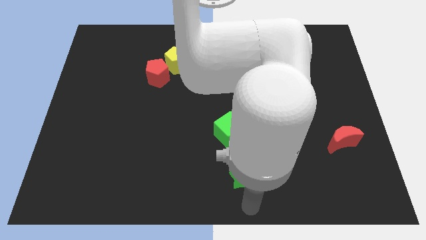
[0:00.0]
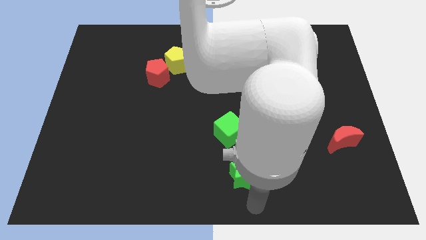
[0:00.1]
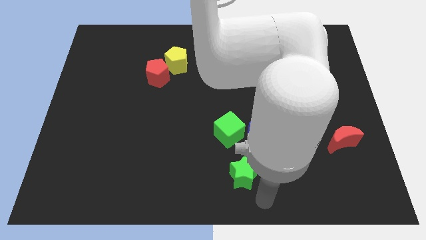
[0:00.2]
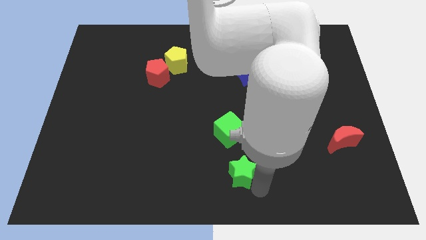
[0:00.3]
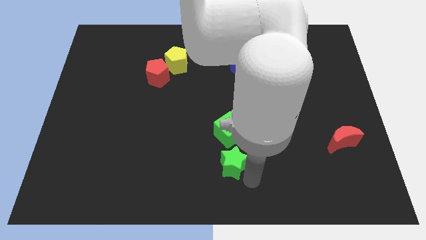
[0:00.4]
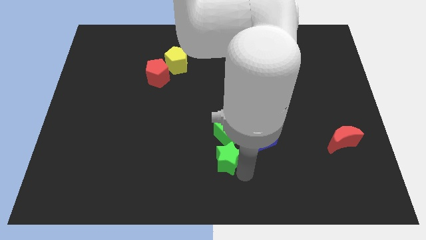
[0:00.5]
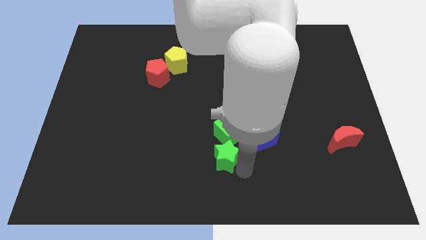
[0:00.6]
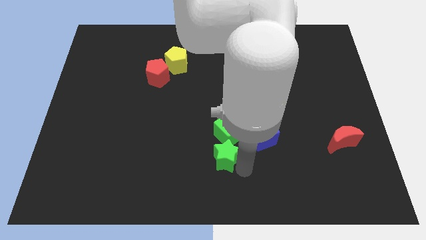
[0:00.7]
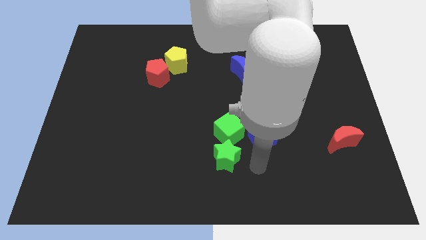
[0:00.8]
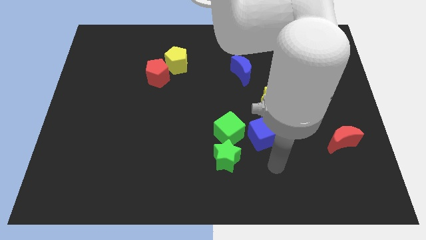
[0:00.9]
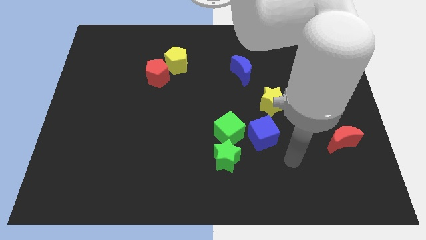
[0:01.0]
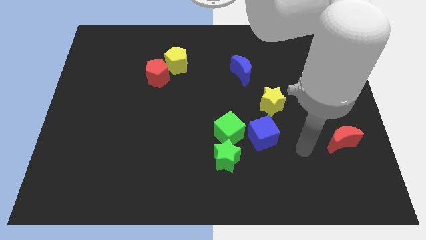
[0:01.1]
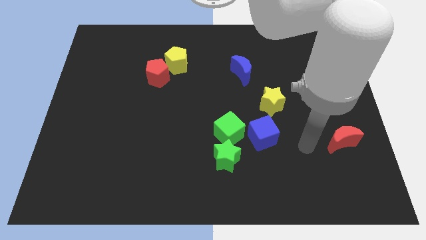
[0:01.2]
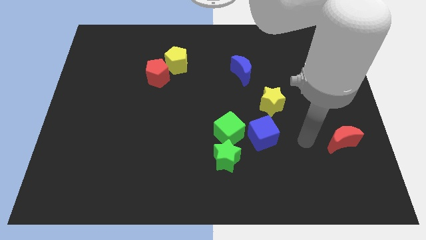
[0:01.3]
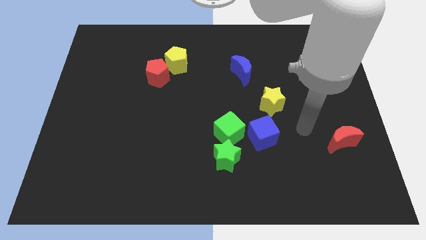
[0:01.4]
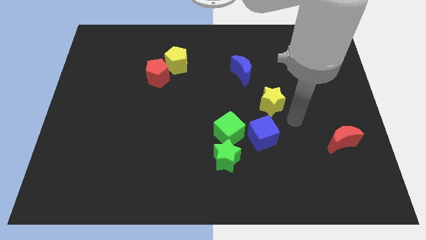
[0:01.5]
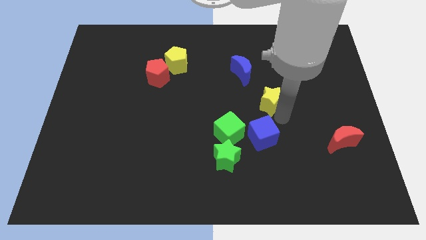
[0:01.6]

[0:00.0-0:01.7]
move the green star towards the green cube

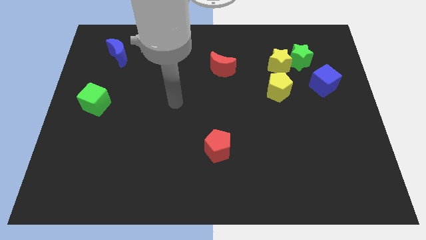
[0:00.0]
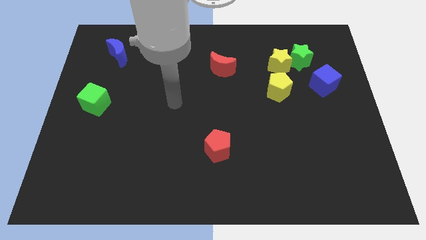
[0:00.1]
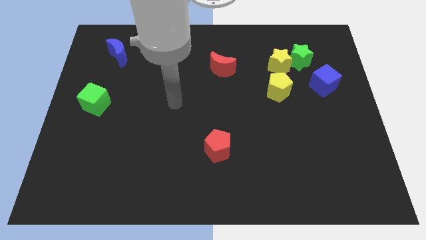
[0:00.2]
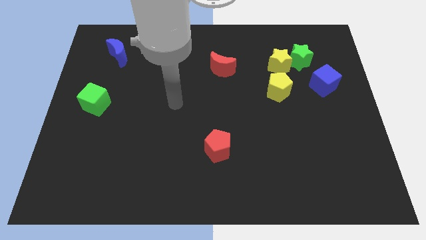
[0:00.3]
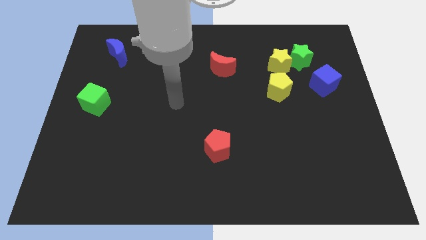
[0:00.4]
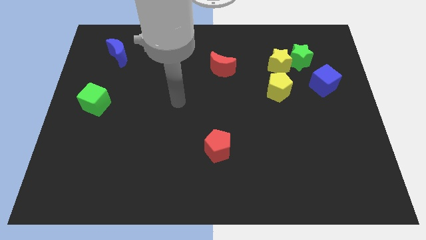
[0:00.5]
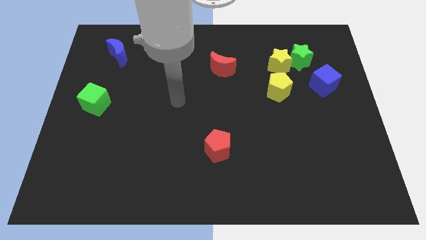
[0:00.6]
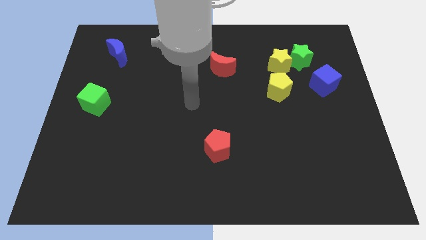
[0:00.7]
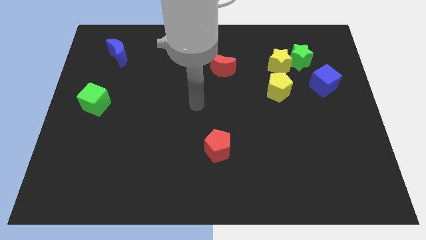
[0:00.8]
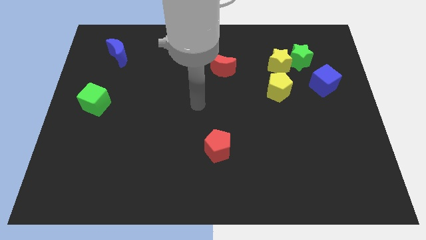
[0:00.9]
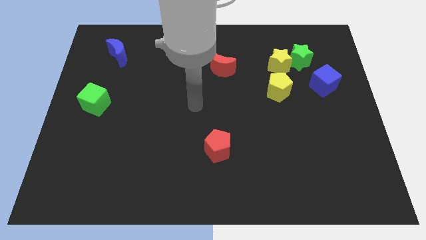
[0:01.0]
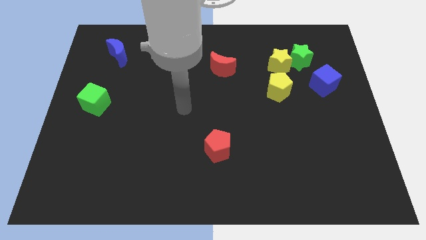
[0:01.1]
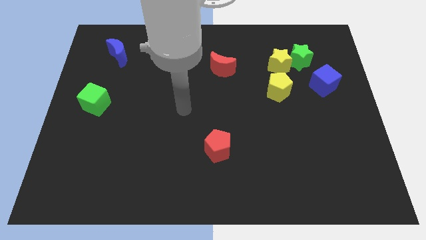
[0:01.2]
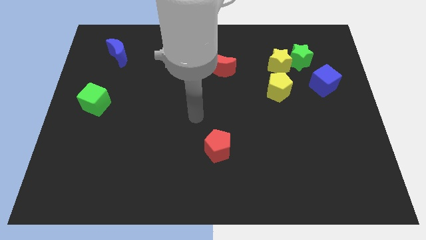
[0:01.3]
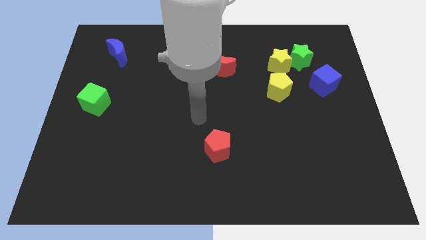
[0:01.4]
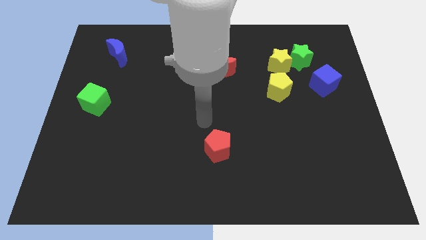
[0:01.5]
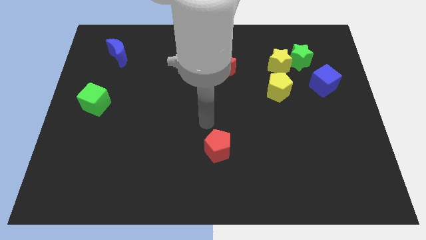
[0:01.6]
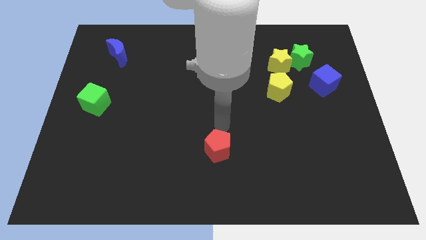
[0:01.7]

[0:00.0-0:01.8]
place your arm above the red pentagon

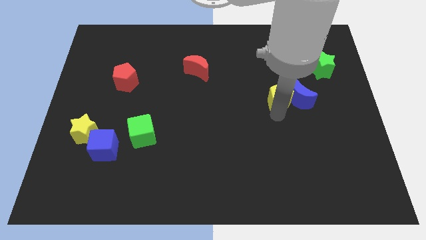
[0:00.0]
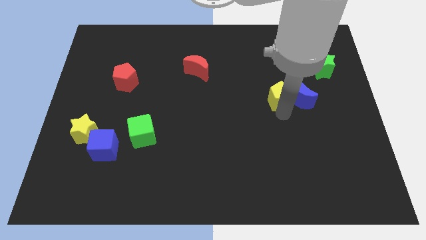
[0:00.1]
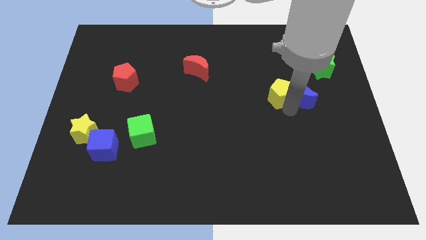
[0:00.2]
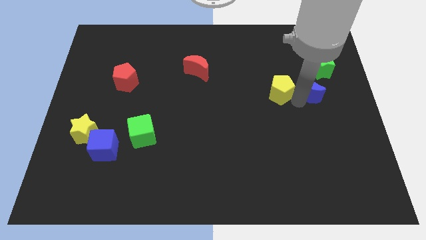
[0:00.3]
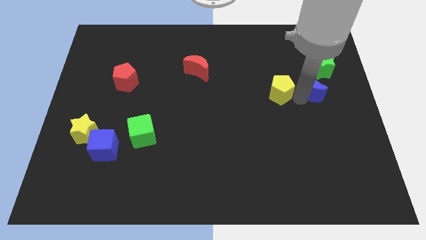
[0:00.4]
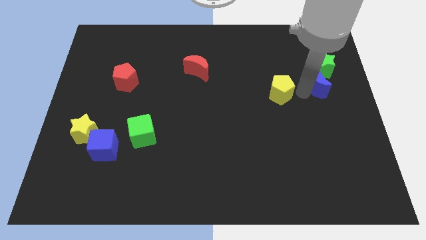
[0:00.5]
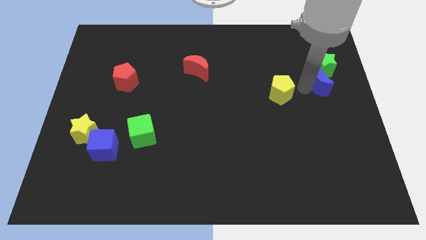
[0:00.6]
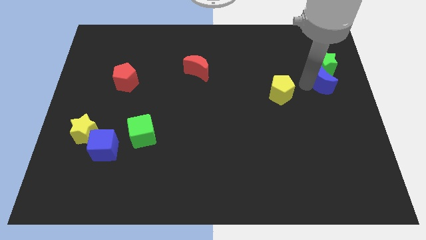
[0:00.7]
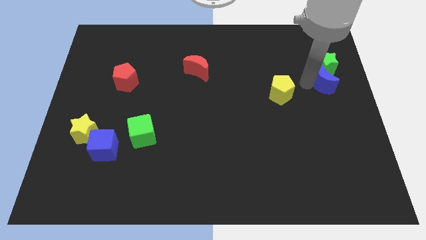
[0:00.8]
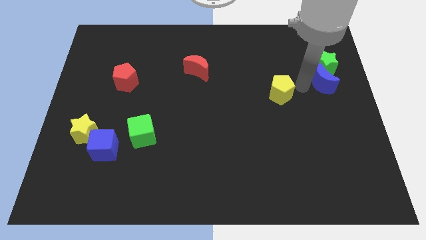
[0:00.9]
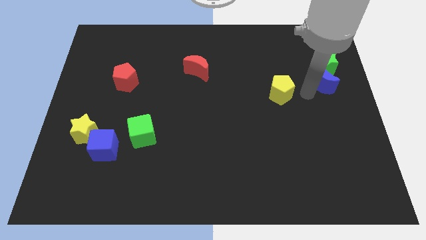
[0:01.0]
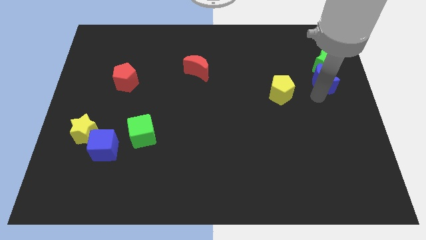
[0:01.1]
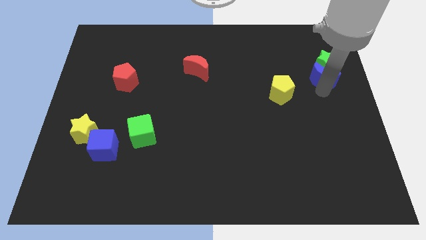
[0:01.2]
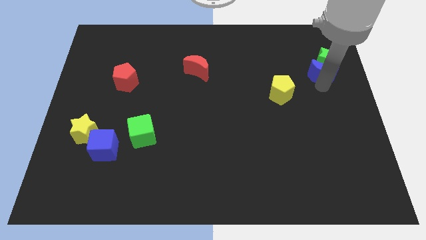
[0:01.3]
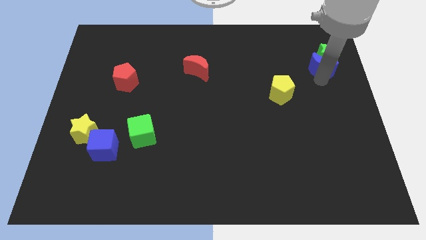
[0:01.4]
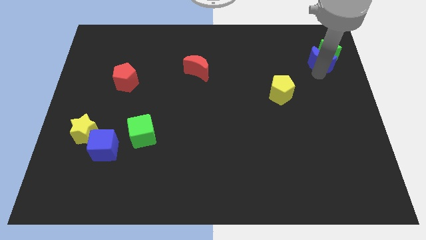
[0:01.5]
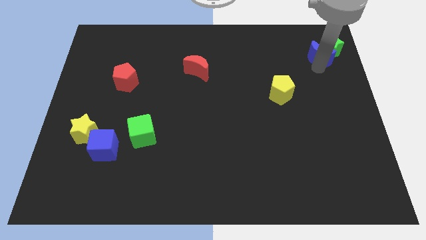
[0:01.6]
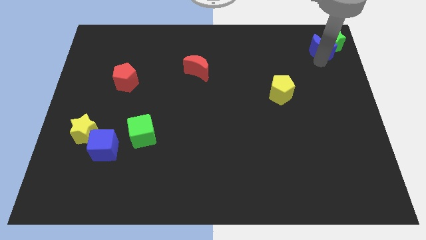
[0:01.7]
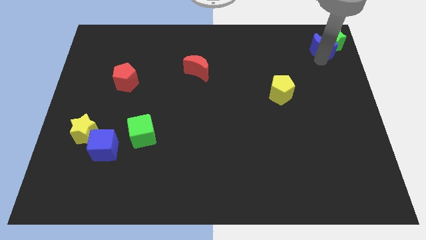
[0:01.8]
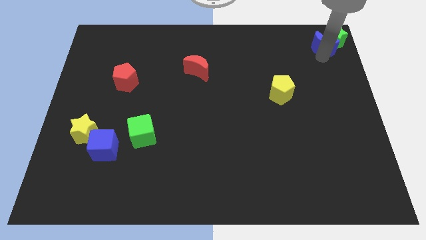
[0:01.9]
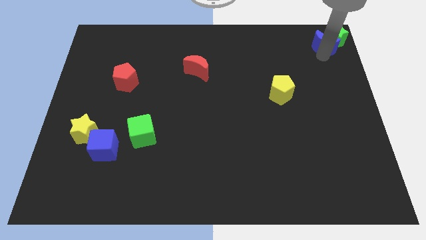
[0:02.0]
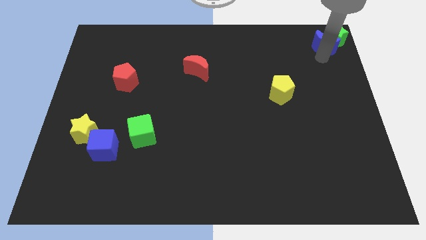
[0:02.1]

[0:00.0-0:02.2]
push the blue moon into the green star

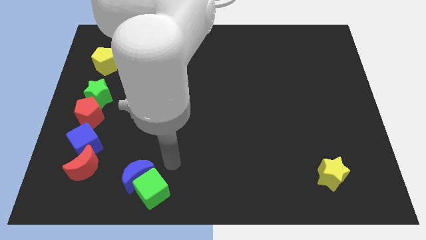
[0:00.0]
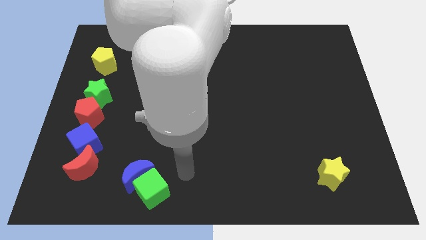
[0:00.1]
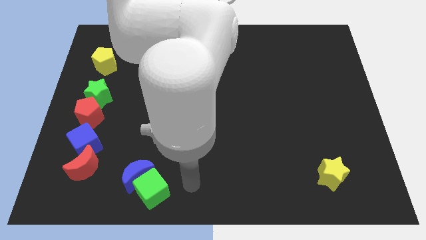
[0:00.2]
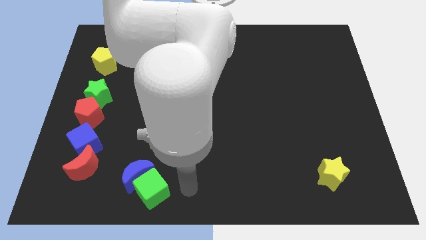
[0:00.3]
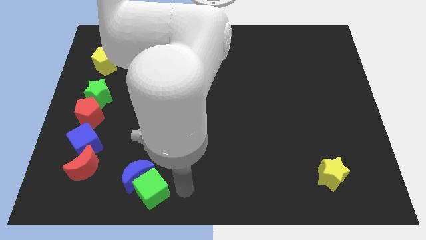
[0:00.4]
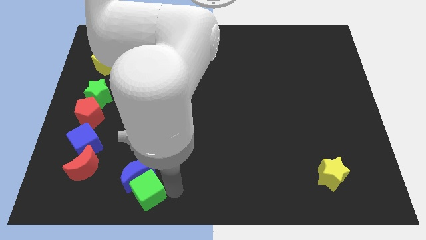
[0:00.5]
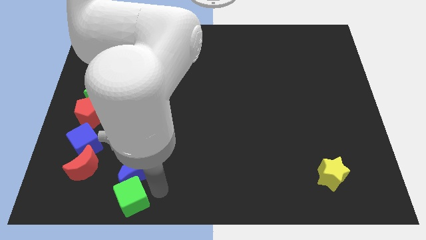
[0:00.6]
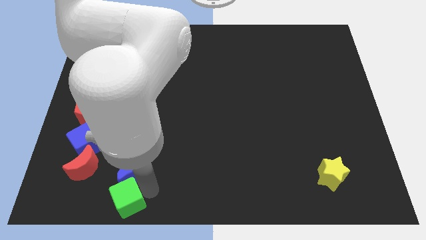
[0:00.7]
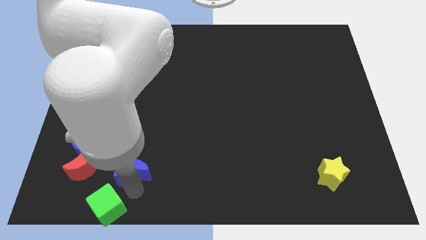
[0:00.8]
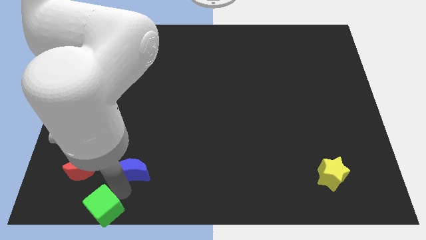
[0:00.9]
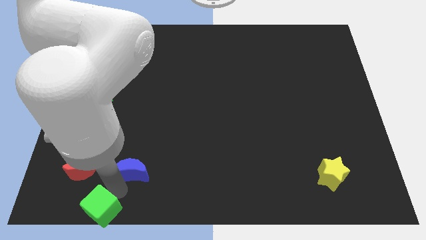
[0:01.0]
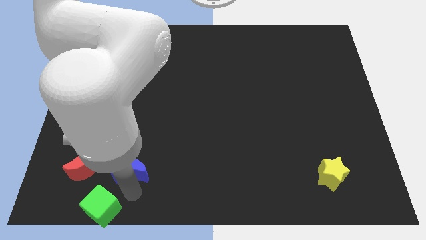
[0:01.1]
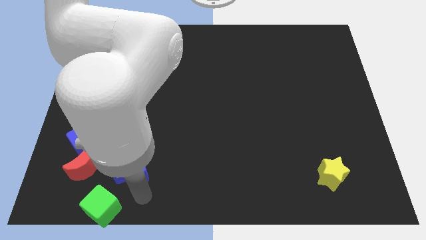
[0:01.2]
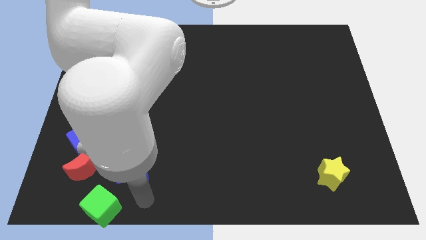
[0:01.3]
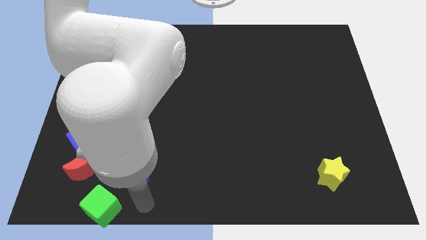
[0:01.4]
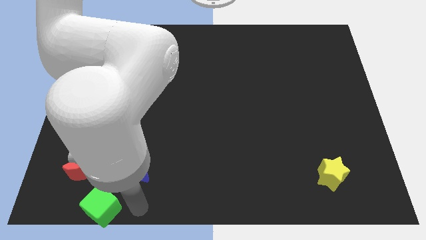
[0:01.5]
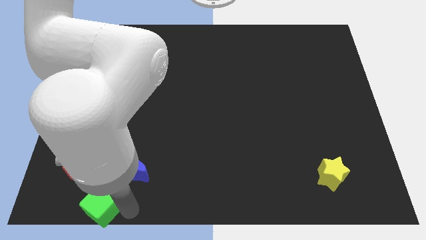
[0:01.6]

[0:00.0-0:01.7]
move the green cube to the left side of the board

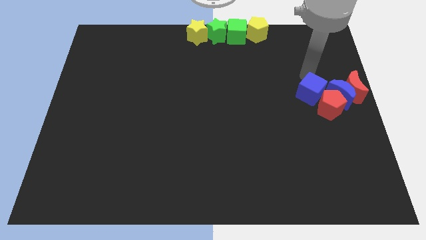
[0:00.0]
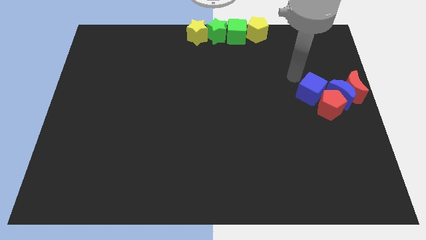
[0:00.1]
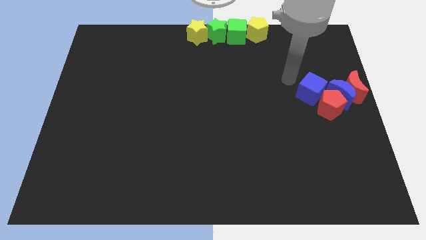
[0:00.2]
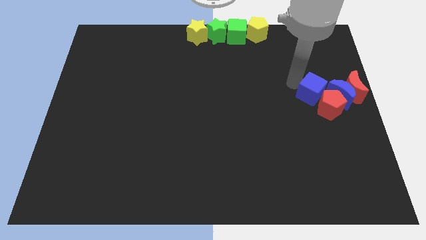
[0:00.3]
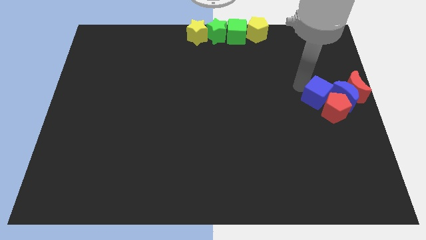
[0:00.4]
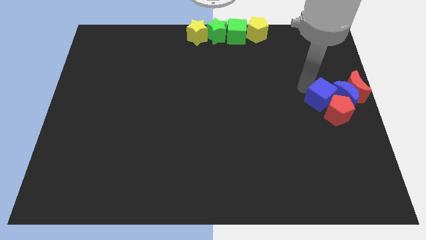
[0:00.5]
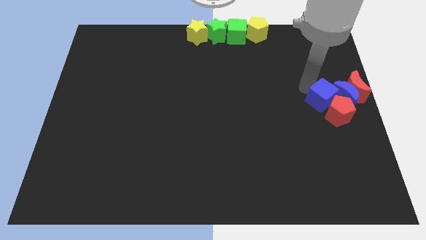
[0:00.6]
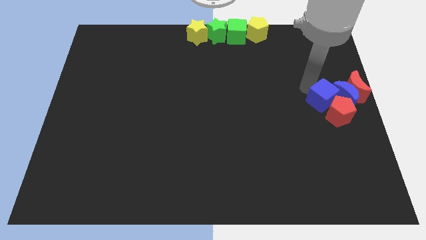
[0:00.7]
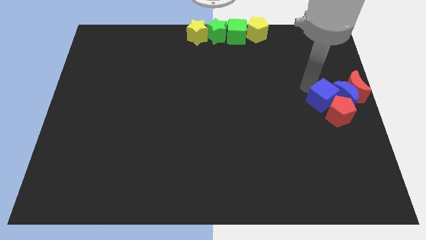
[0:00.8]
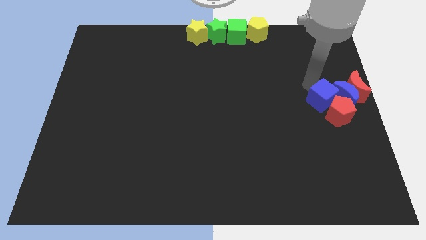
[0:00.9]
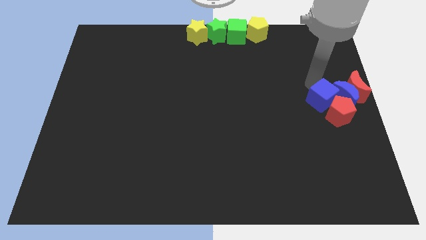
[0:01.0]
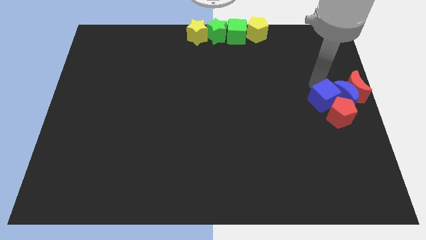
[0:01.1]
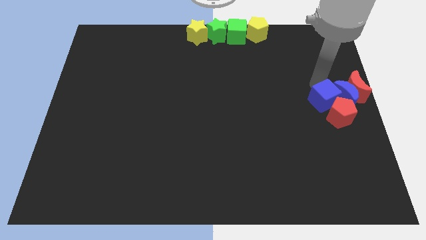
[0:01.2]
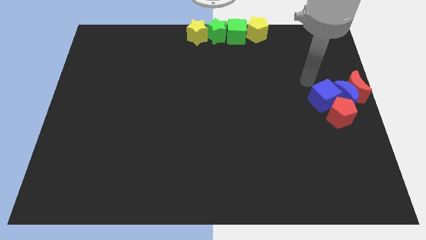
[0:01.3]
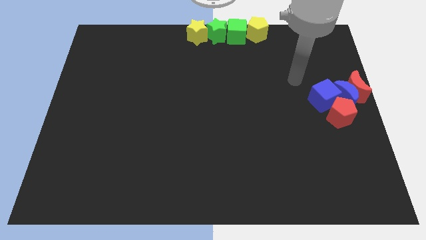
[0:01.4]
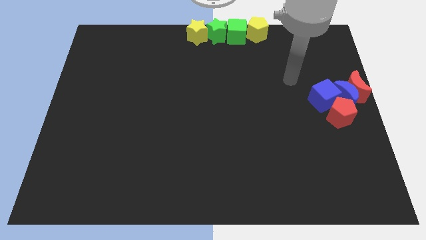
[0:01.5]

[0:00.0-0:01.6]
push the blue cube towards the right center of the board
